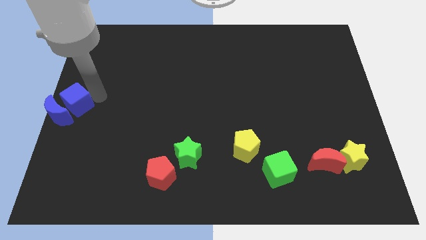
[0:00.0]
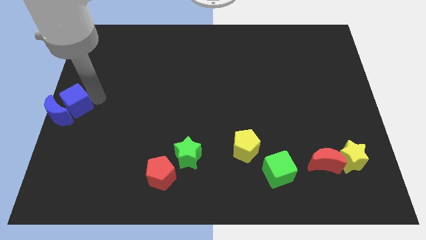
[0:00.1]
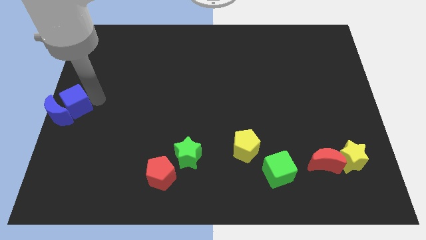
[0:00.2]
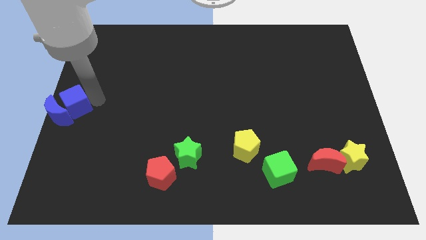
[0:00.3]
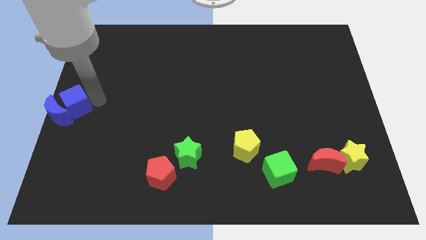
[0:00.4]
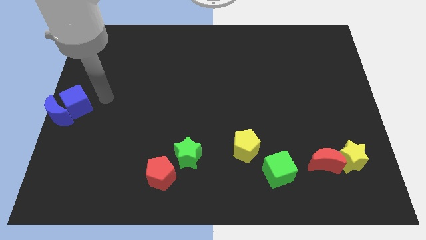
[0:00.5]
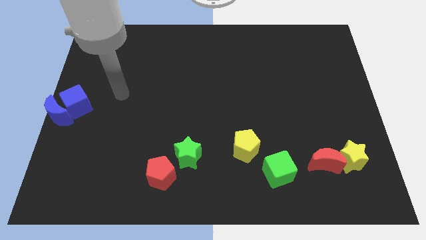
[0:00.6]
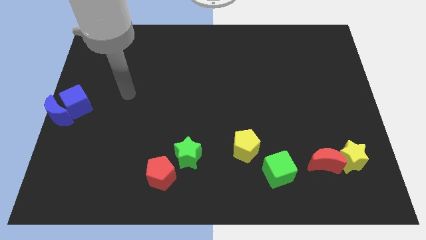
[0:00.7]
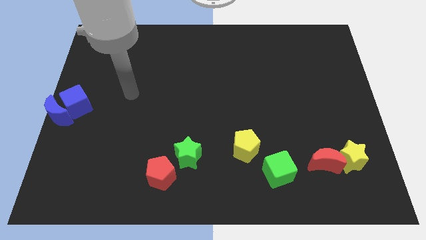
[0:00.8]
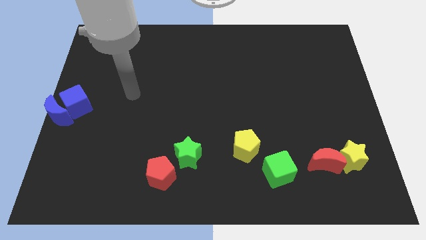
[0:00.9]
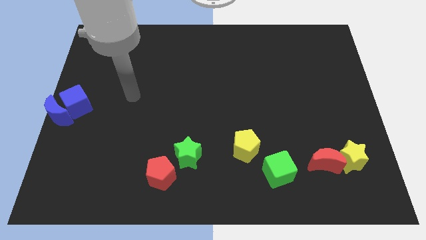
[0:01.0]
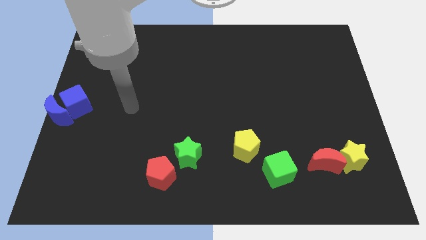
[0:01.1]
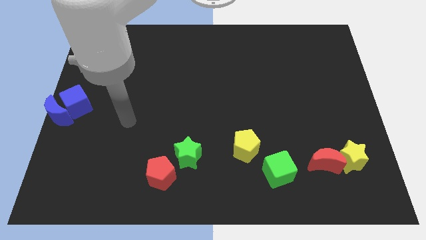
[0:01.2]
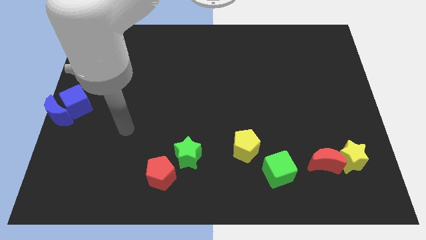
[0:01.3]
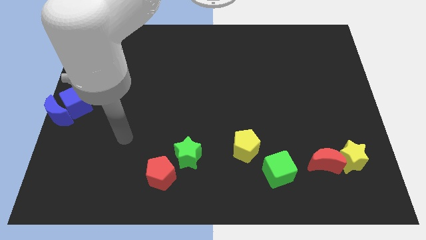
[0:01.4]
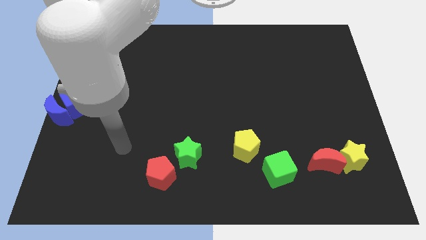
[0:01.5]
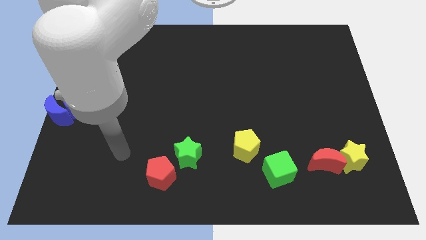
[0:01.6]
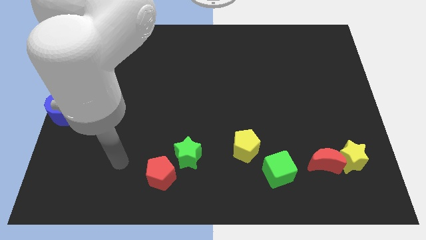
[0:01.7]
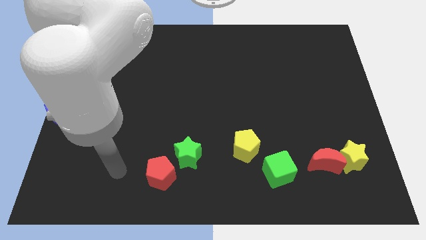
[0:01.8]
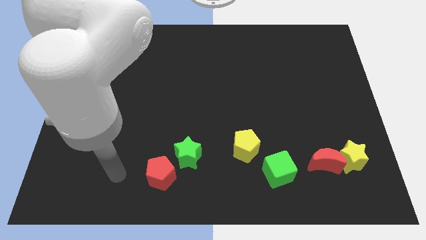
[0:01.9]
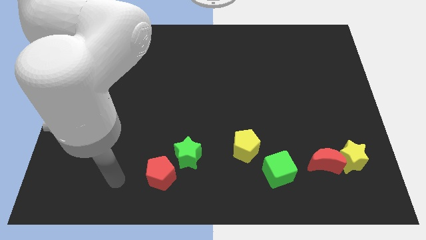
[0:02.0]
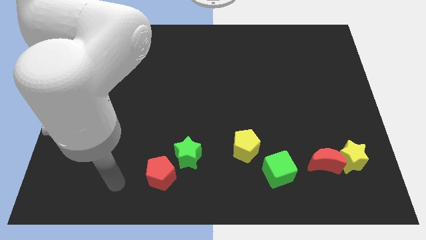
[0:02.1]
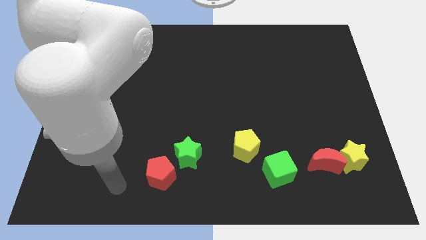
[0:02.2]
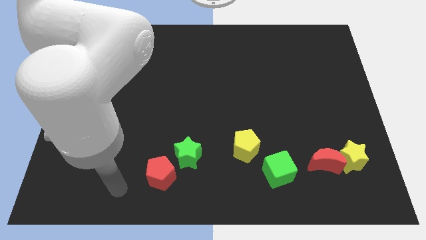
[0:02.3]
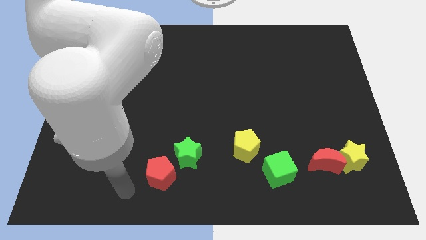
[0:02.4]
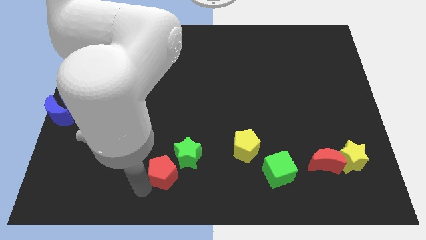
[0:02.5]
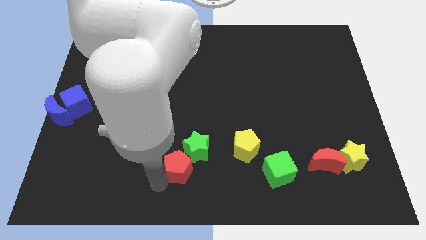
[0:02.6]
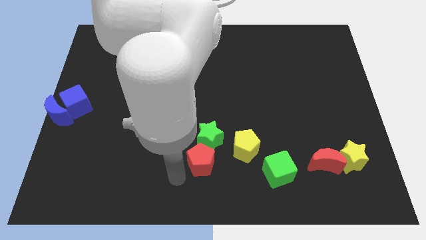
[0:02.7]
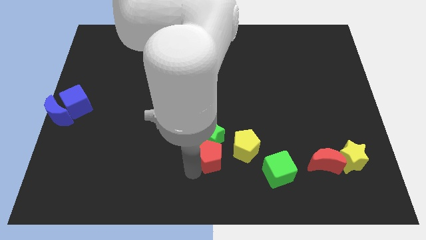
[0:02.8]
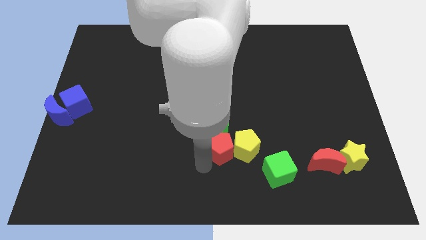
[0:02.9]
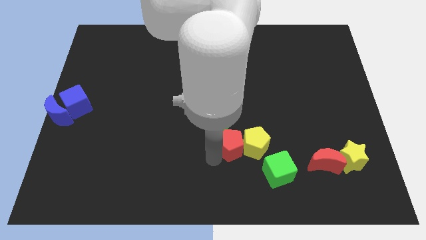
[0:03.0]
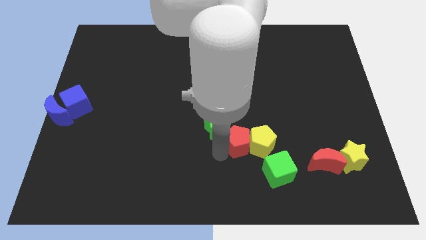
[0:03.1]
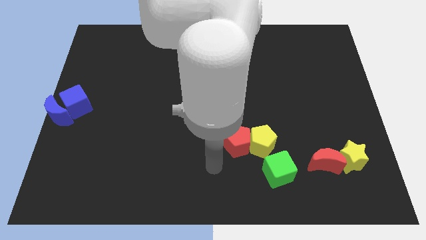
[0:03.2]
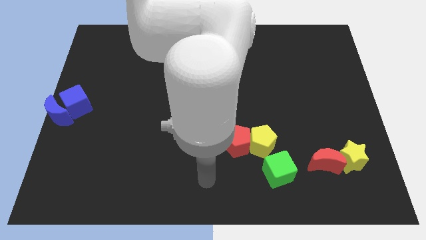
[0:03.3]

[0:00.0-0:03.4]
push the red pentagon into yellow pentagon

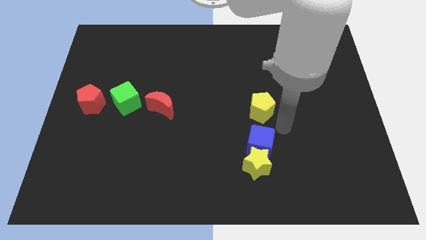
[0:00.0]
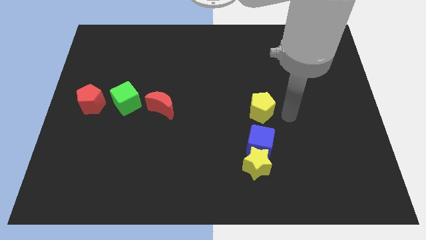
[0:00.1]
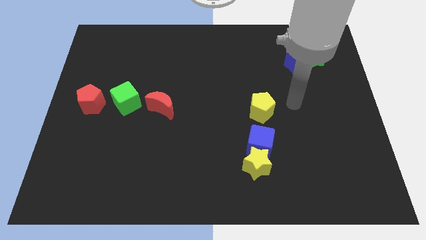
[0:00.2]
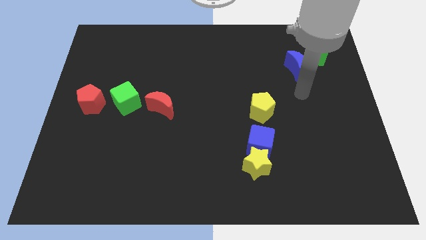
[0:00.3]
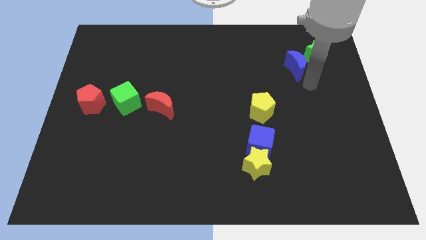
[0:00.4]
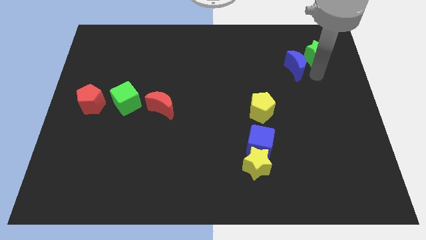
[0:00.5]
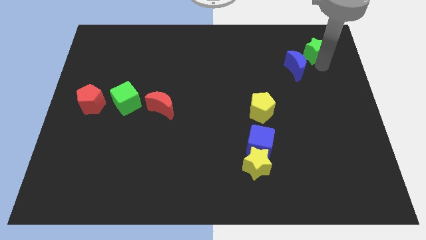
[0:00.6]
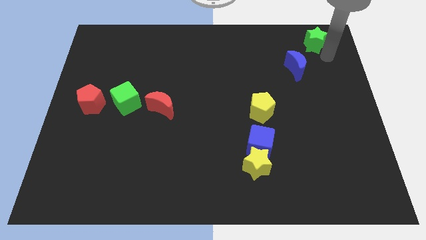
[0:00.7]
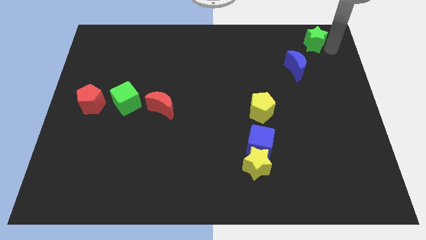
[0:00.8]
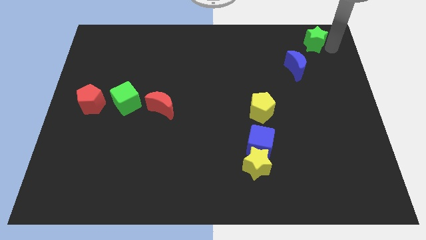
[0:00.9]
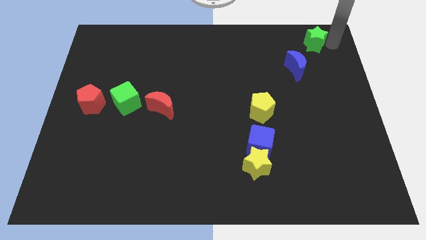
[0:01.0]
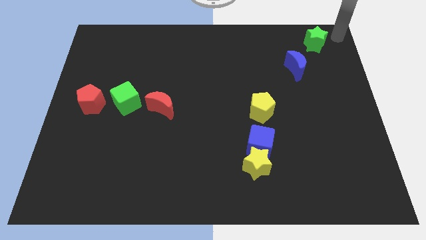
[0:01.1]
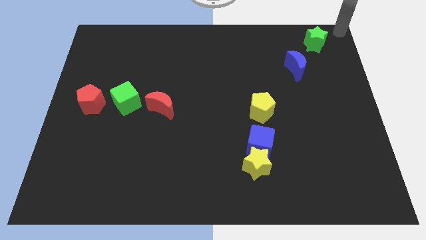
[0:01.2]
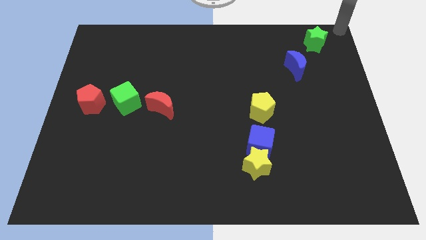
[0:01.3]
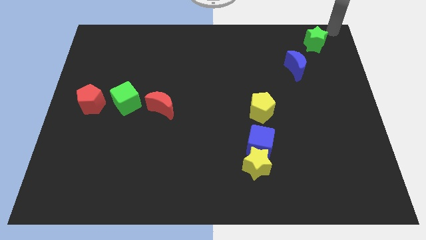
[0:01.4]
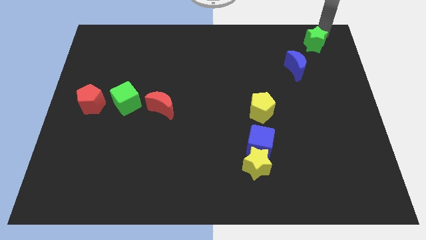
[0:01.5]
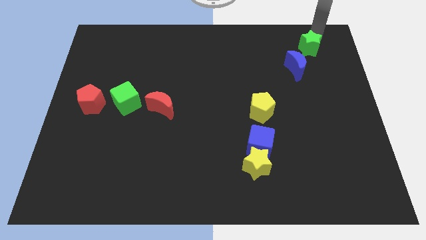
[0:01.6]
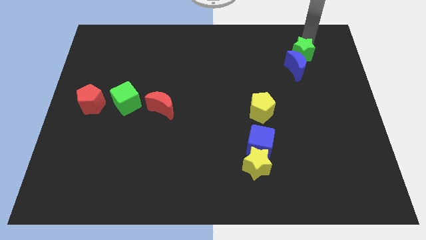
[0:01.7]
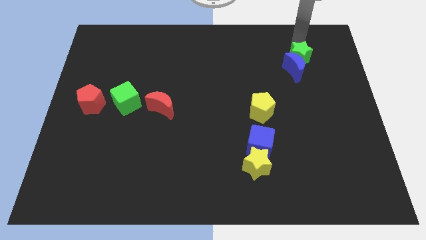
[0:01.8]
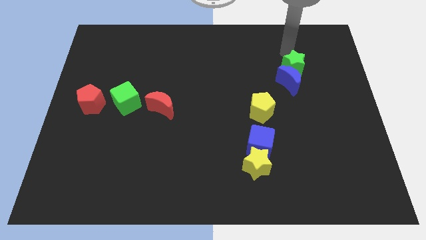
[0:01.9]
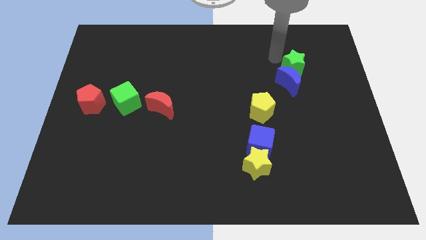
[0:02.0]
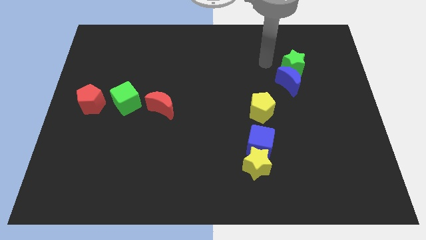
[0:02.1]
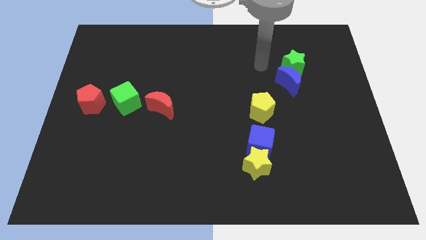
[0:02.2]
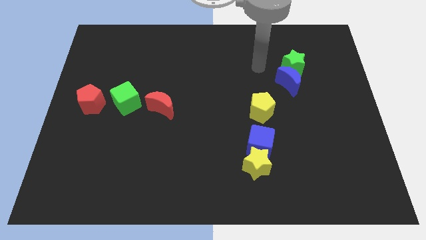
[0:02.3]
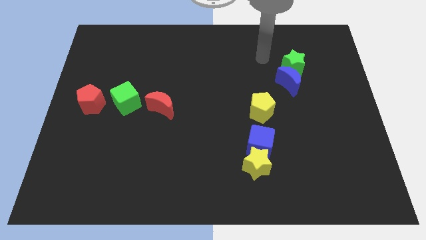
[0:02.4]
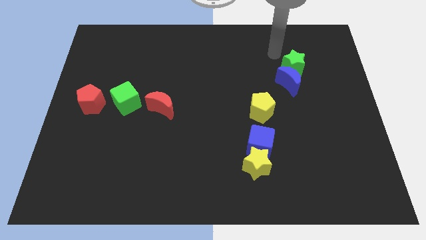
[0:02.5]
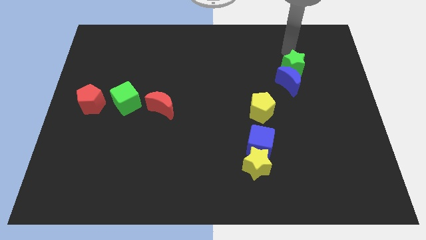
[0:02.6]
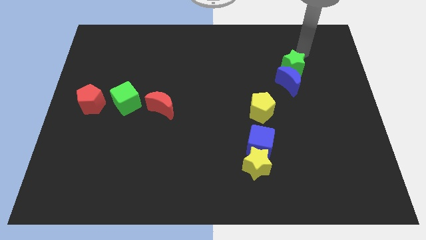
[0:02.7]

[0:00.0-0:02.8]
push the green star into the top side of the blue crescent

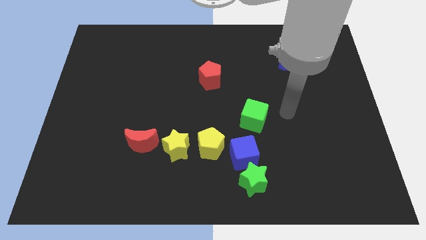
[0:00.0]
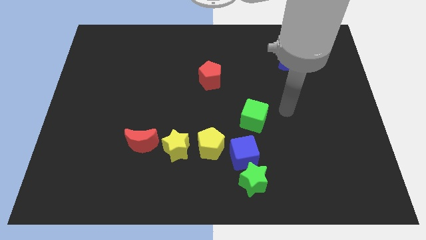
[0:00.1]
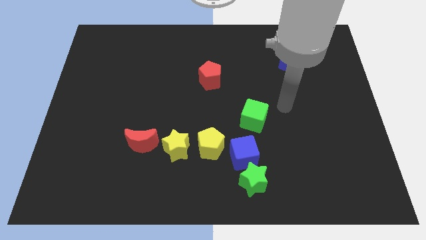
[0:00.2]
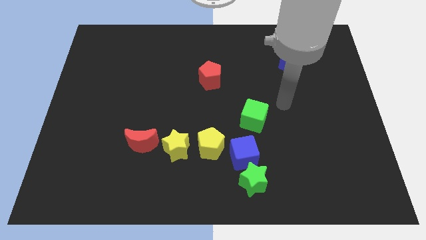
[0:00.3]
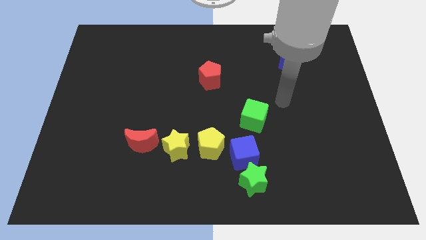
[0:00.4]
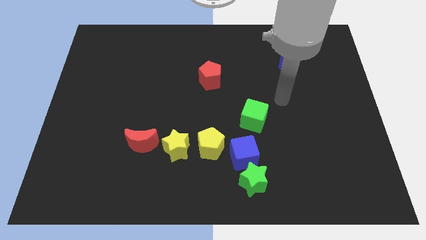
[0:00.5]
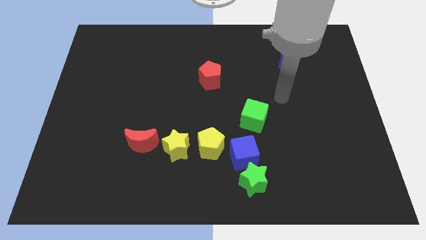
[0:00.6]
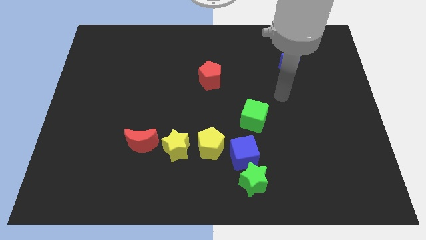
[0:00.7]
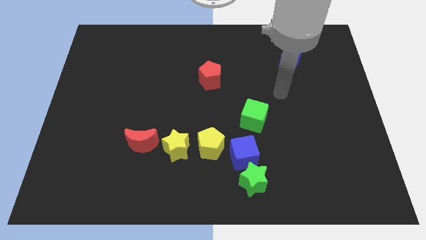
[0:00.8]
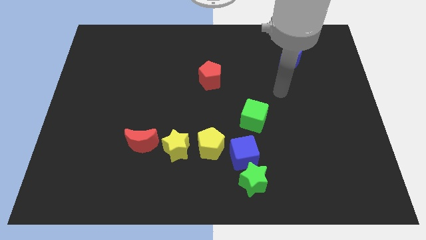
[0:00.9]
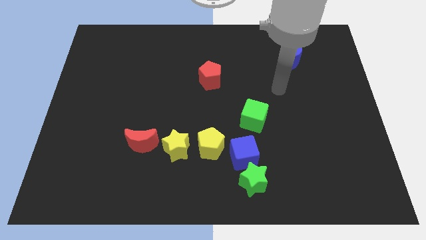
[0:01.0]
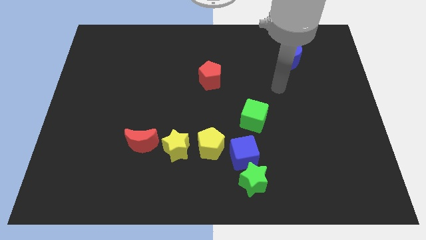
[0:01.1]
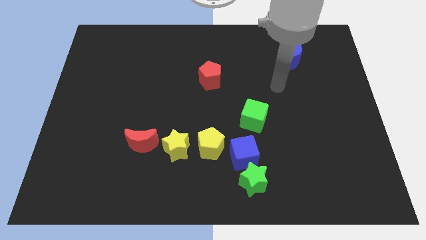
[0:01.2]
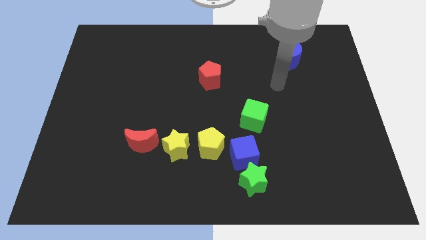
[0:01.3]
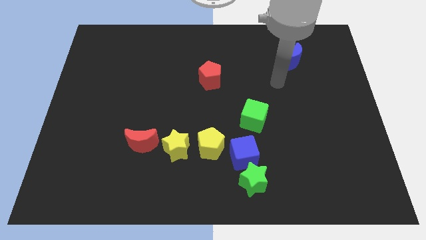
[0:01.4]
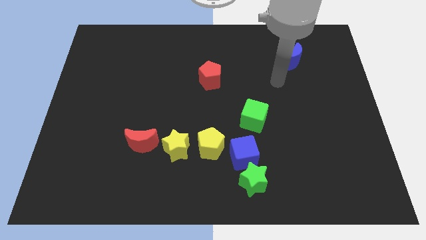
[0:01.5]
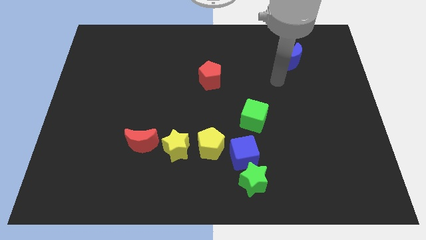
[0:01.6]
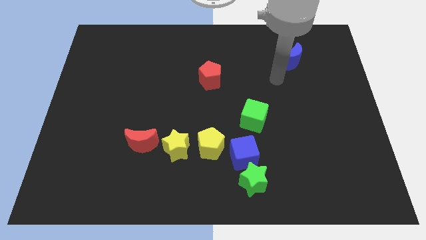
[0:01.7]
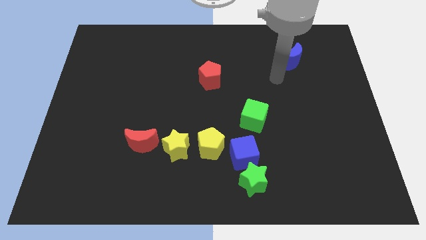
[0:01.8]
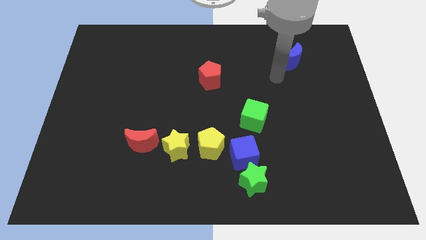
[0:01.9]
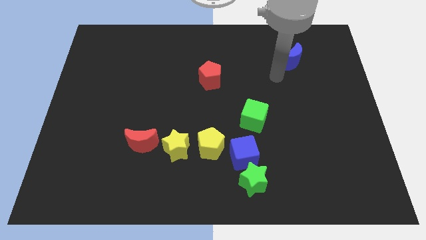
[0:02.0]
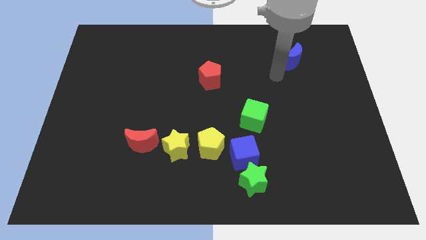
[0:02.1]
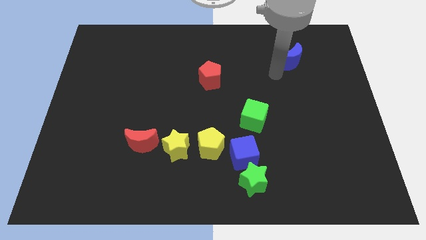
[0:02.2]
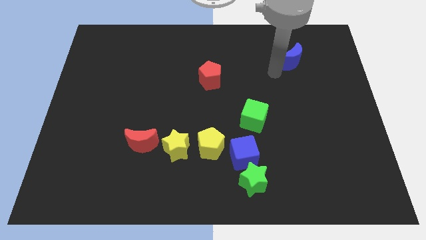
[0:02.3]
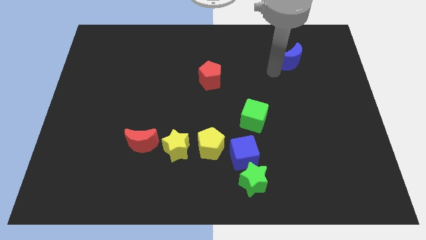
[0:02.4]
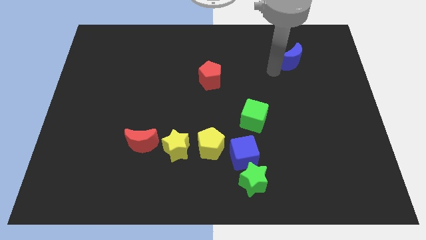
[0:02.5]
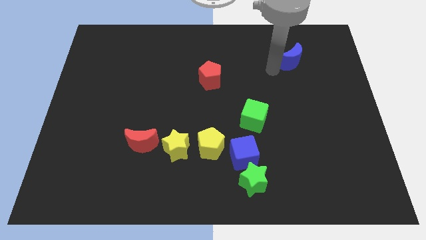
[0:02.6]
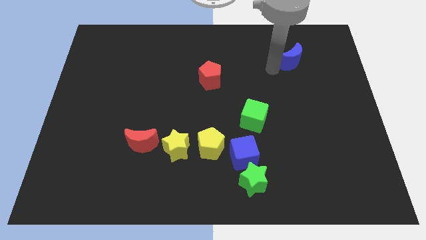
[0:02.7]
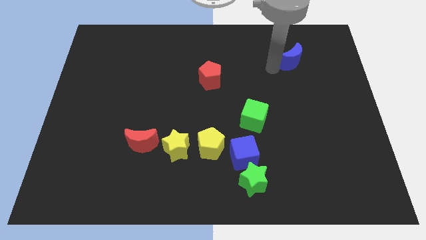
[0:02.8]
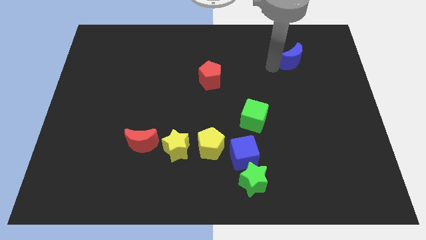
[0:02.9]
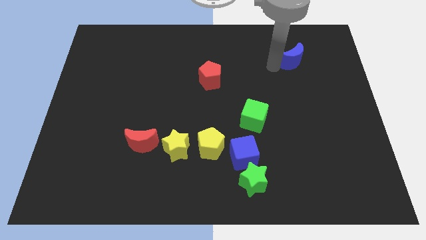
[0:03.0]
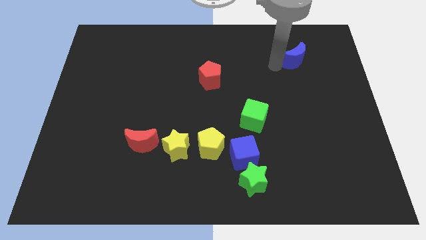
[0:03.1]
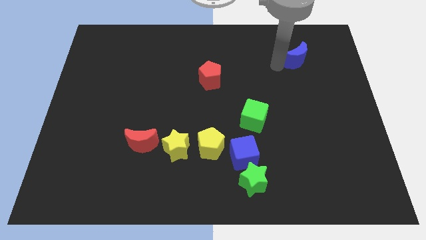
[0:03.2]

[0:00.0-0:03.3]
touch the blue moon
